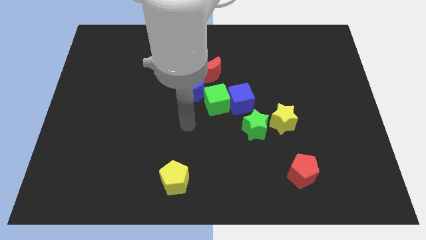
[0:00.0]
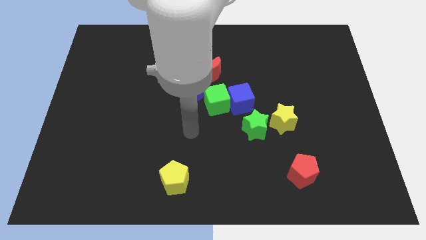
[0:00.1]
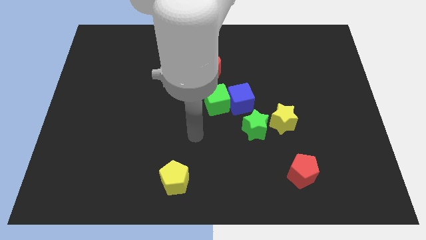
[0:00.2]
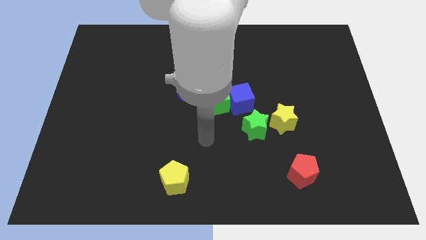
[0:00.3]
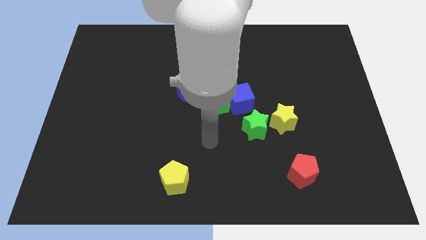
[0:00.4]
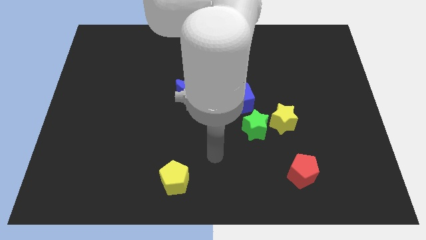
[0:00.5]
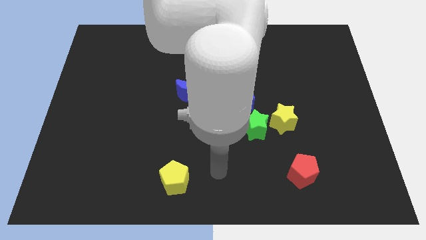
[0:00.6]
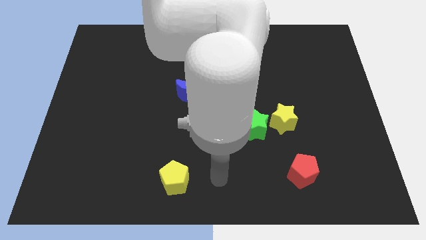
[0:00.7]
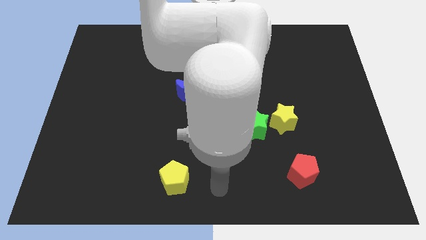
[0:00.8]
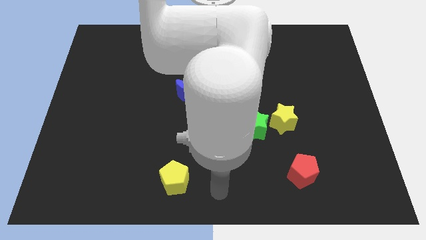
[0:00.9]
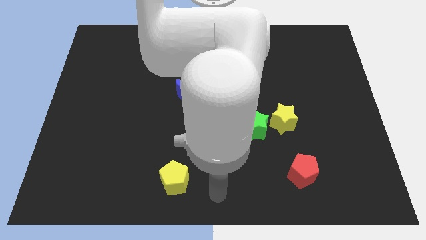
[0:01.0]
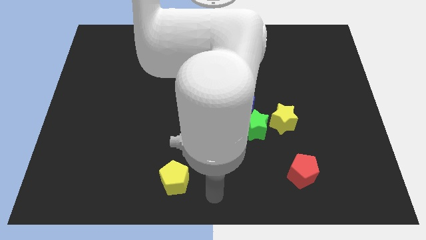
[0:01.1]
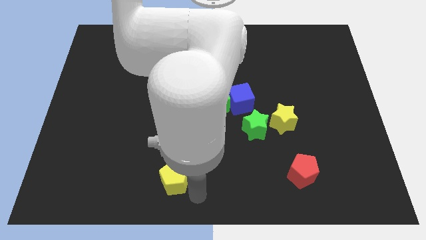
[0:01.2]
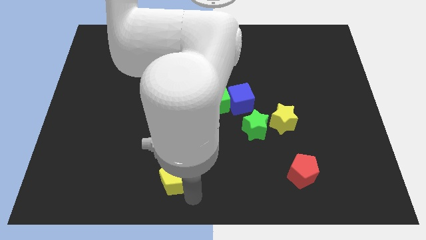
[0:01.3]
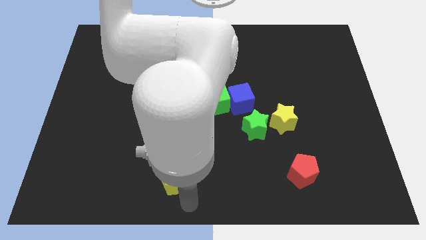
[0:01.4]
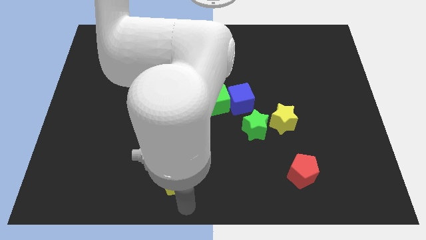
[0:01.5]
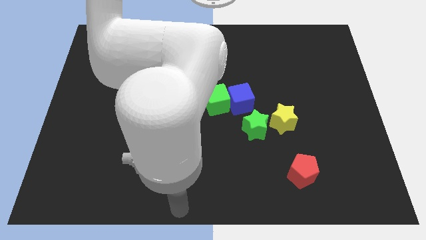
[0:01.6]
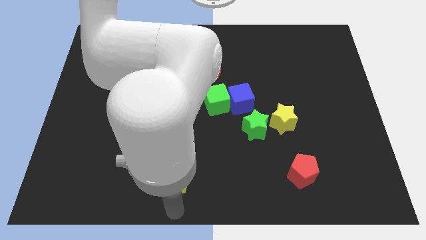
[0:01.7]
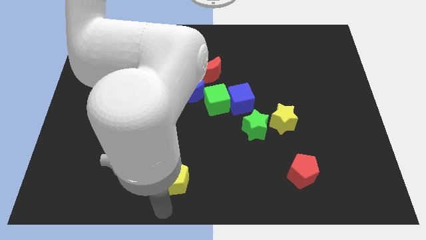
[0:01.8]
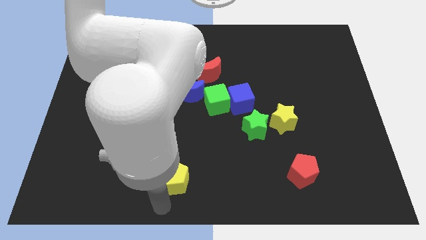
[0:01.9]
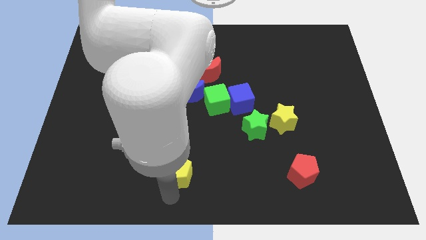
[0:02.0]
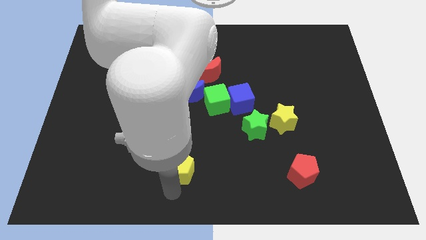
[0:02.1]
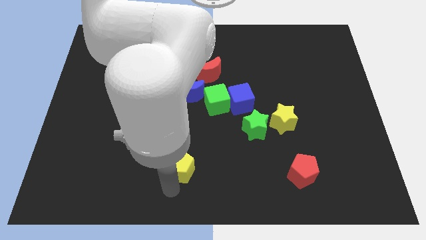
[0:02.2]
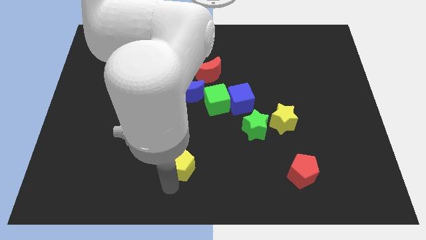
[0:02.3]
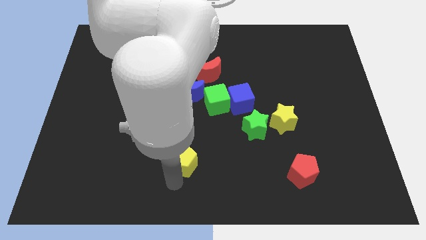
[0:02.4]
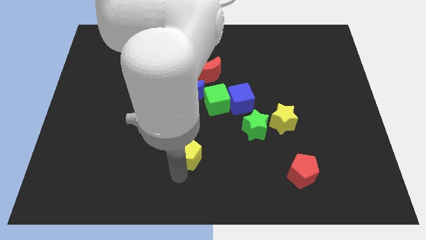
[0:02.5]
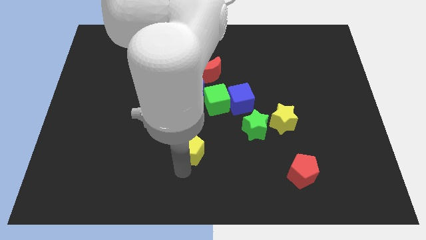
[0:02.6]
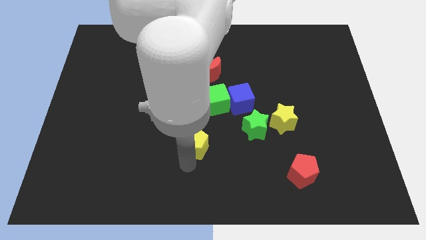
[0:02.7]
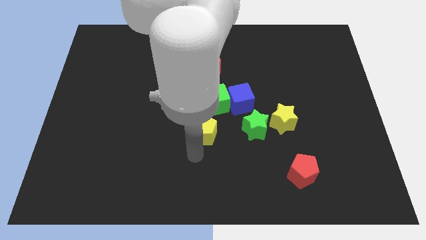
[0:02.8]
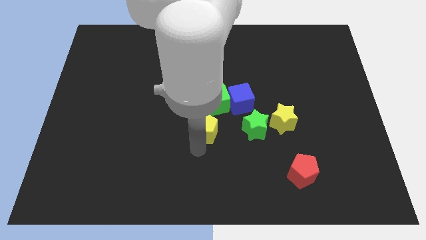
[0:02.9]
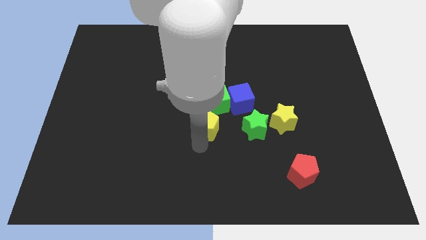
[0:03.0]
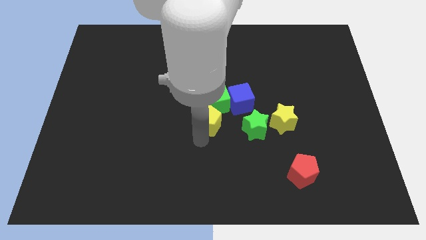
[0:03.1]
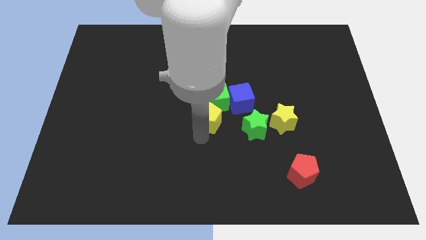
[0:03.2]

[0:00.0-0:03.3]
move the yellow pentagon to the left of the green star

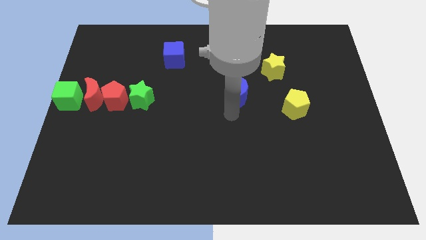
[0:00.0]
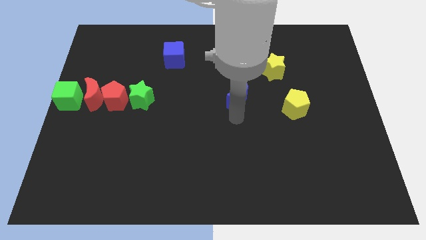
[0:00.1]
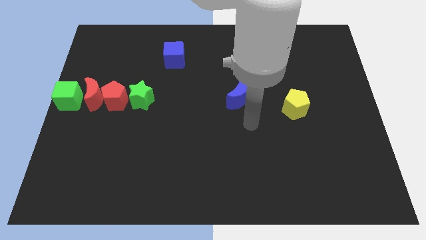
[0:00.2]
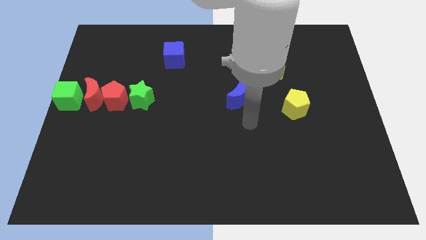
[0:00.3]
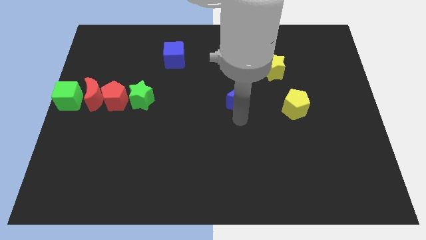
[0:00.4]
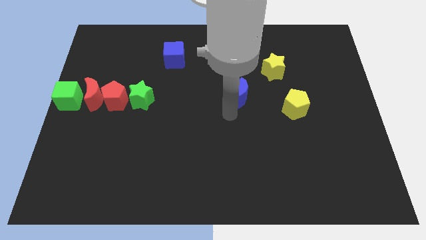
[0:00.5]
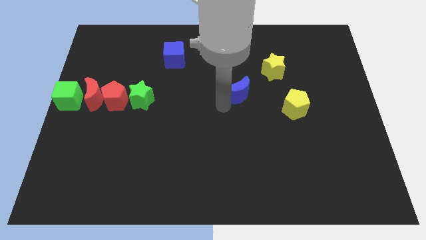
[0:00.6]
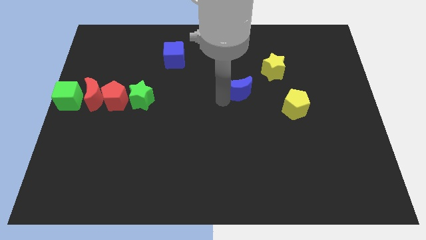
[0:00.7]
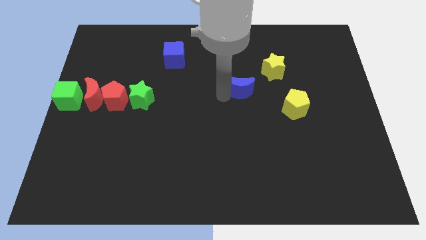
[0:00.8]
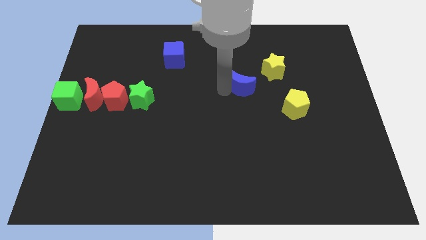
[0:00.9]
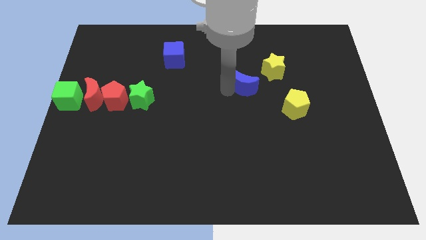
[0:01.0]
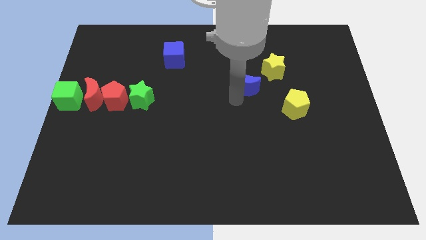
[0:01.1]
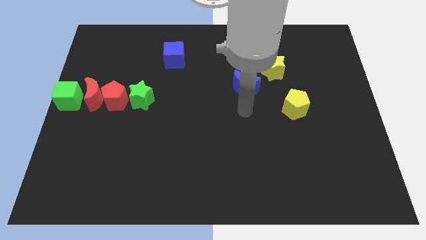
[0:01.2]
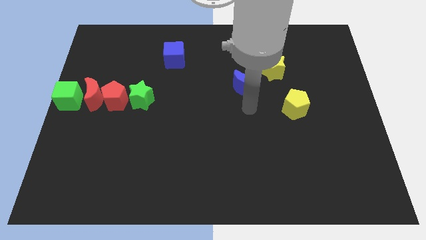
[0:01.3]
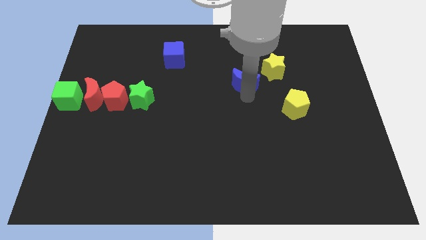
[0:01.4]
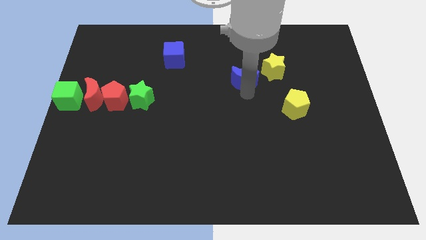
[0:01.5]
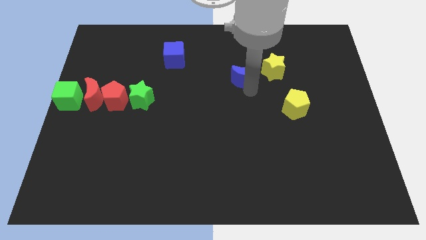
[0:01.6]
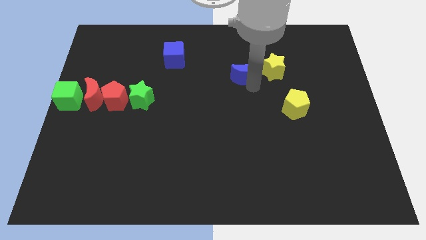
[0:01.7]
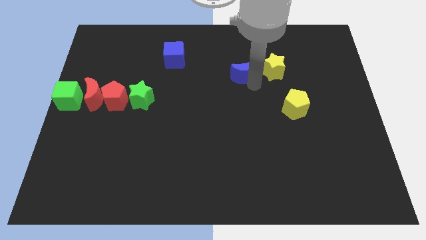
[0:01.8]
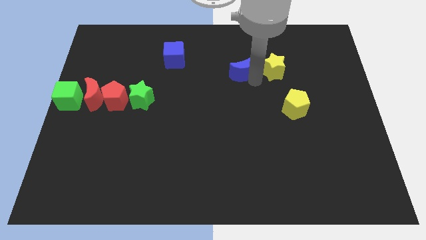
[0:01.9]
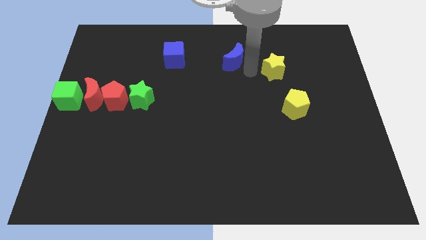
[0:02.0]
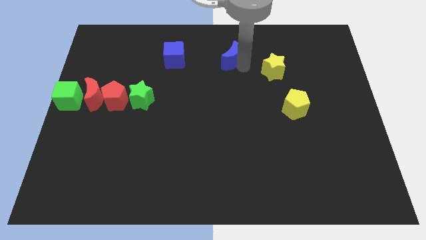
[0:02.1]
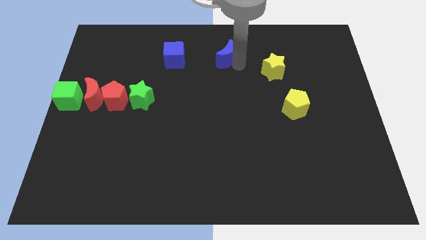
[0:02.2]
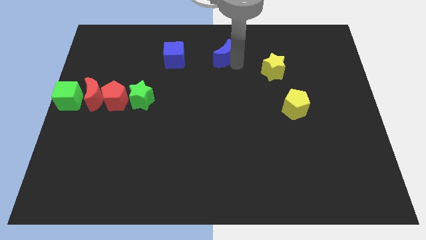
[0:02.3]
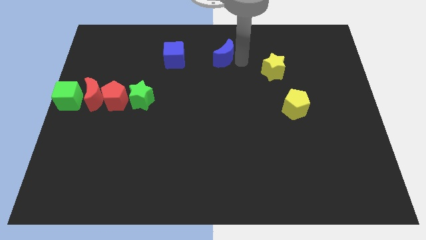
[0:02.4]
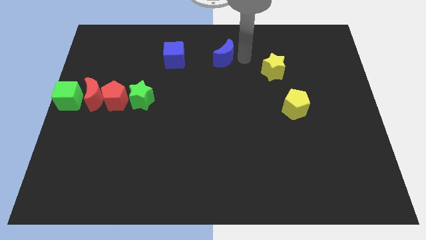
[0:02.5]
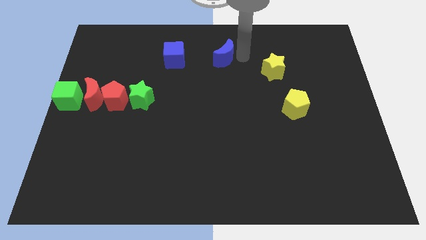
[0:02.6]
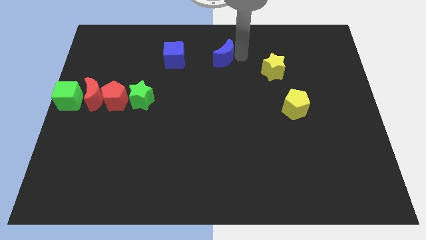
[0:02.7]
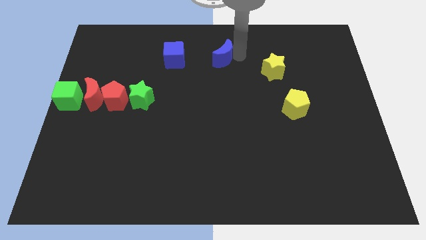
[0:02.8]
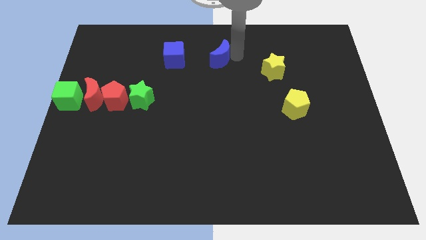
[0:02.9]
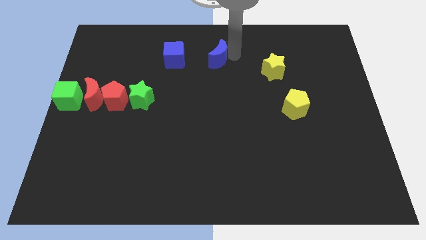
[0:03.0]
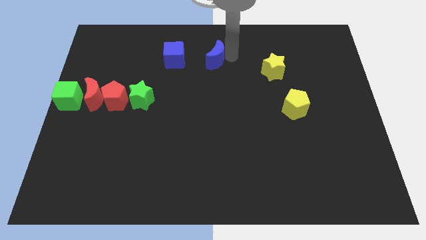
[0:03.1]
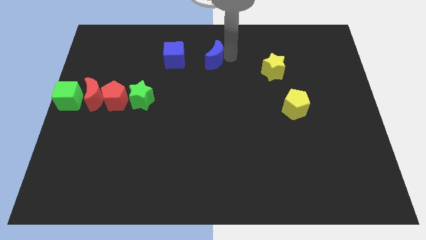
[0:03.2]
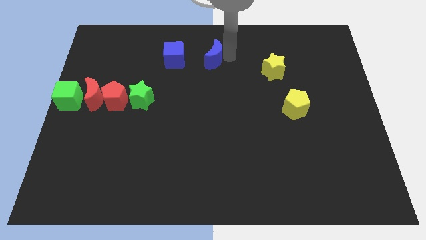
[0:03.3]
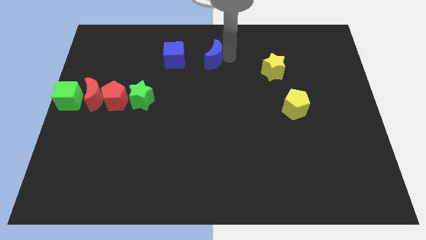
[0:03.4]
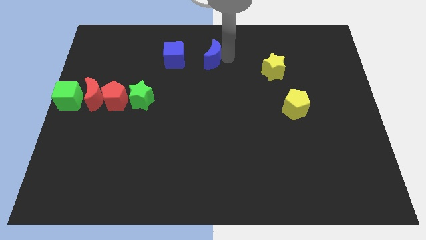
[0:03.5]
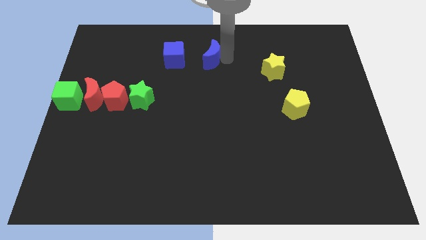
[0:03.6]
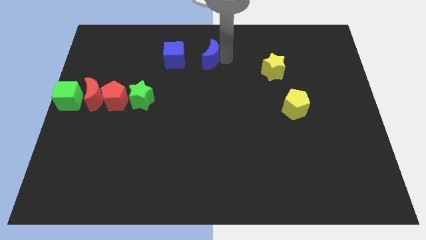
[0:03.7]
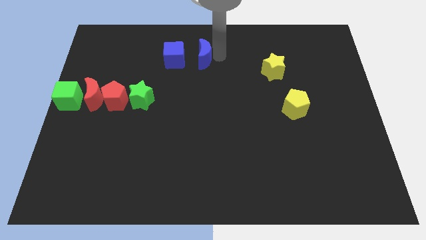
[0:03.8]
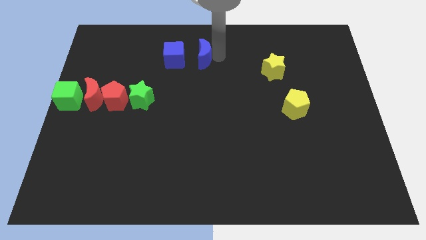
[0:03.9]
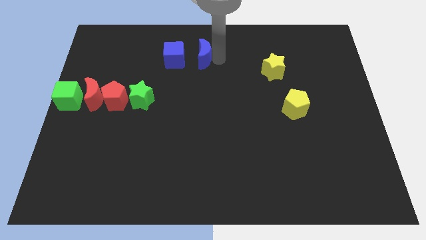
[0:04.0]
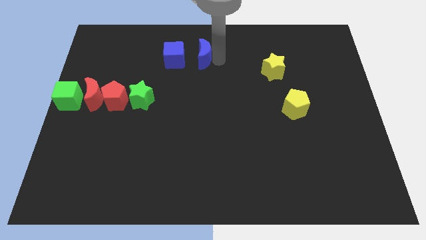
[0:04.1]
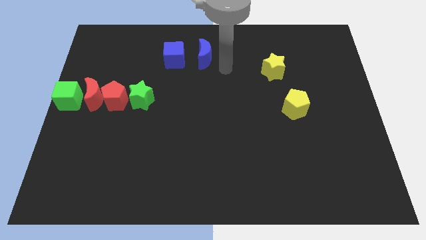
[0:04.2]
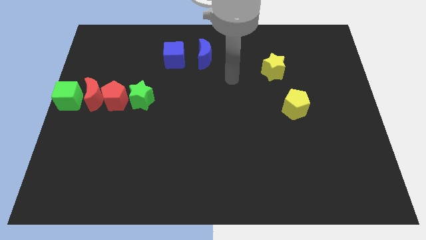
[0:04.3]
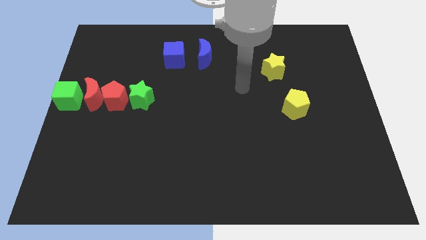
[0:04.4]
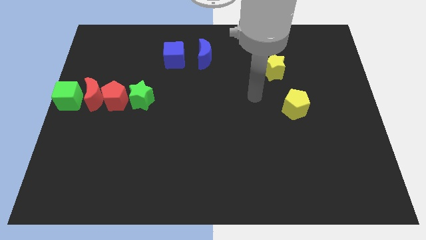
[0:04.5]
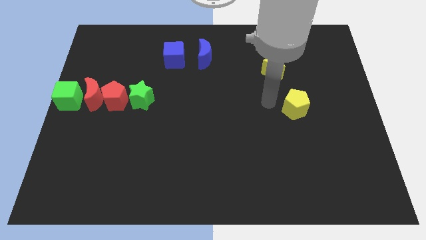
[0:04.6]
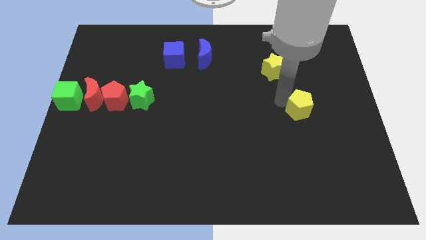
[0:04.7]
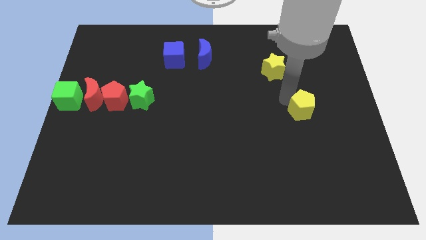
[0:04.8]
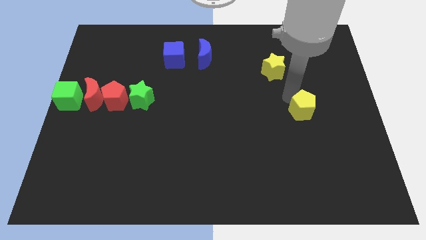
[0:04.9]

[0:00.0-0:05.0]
move the blue crescent right beside blue cube

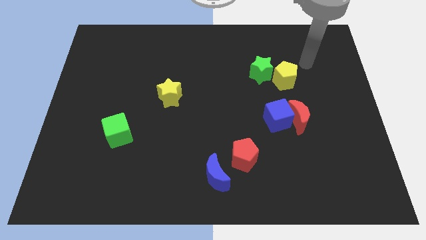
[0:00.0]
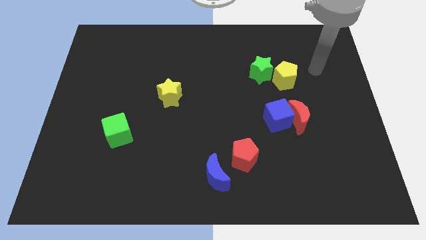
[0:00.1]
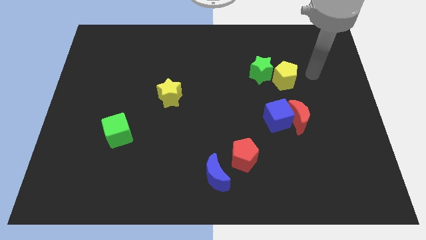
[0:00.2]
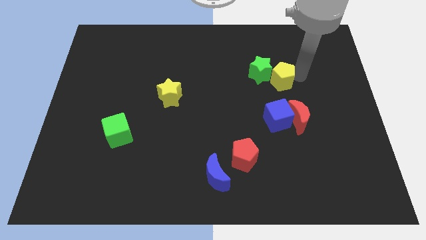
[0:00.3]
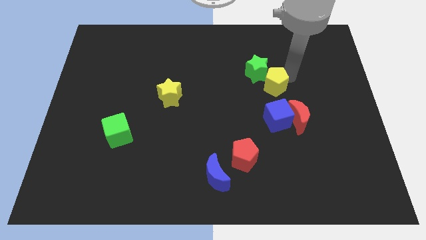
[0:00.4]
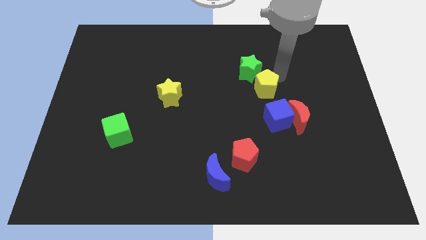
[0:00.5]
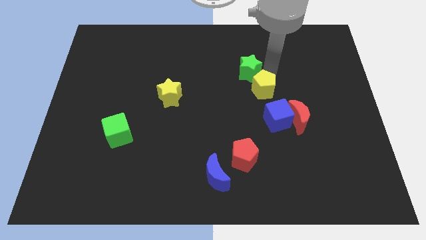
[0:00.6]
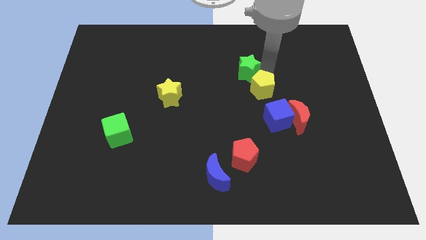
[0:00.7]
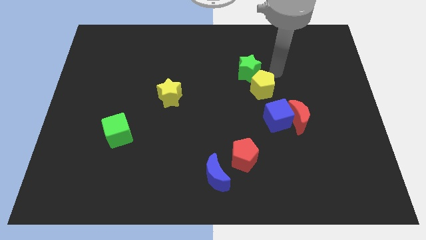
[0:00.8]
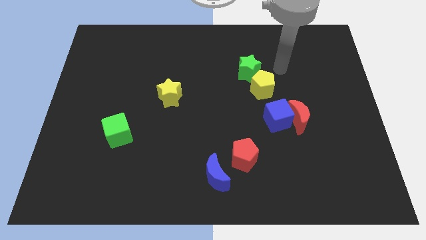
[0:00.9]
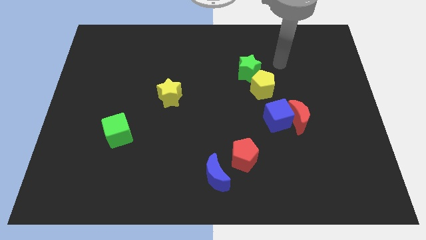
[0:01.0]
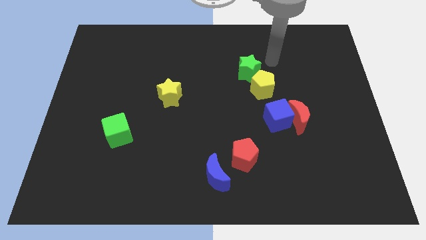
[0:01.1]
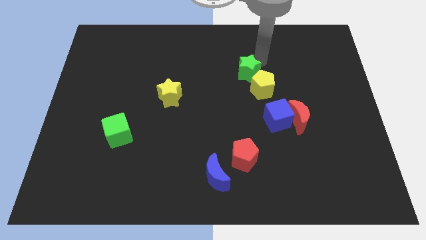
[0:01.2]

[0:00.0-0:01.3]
place the yellow pentagon towards the bottom right side of the green star
